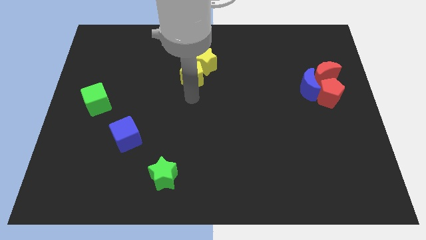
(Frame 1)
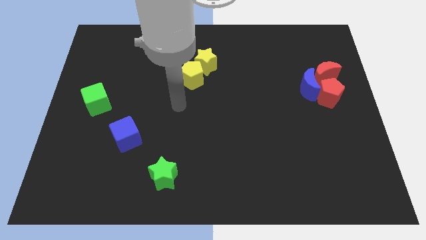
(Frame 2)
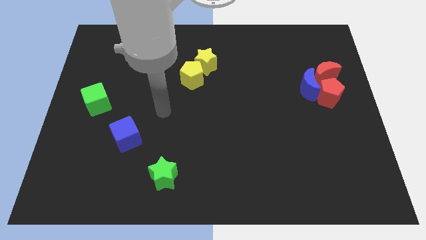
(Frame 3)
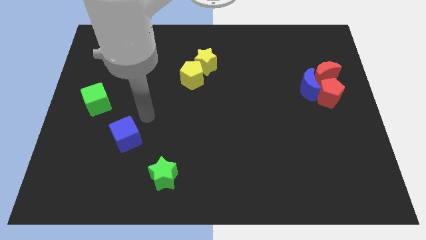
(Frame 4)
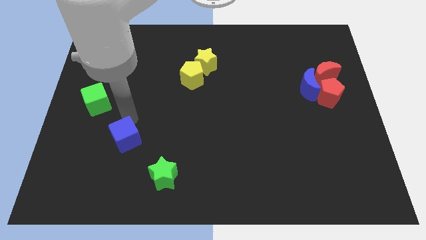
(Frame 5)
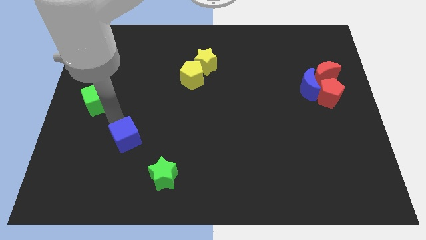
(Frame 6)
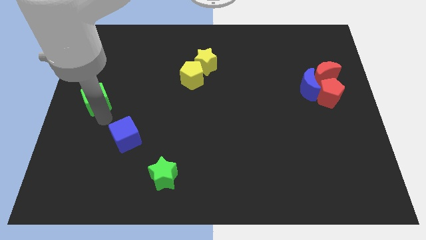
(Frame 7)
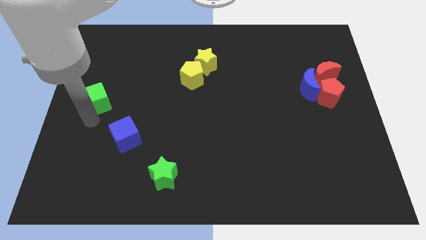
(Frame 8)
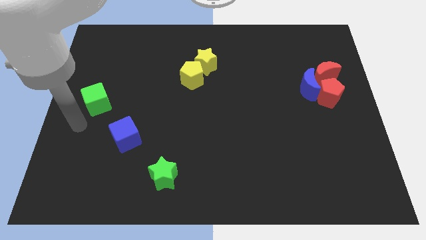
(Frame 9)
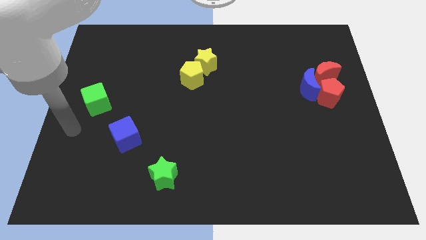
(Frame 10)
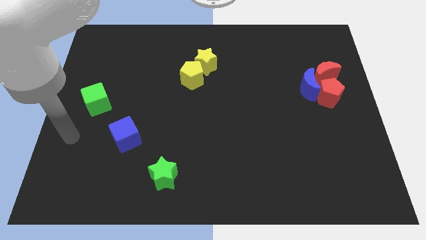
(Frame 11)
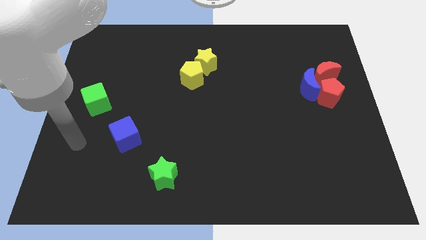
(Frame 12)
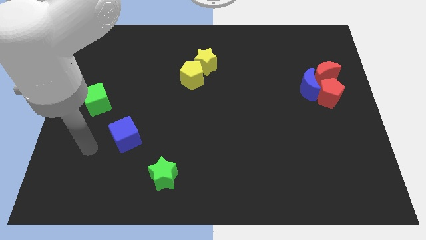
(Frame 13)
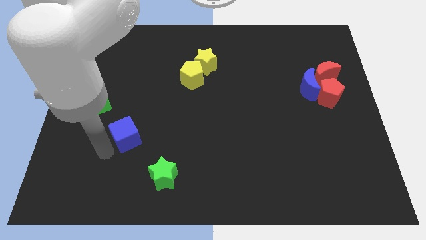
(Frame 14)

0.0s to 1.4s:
move your arm to the left of blue cube

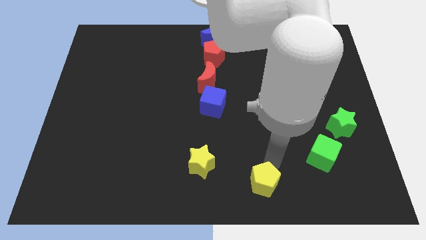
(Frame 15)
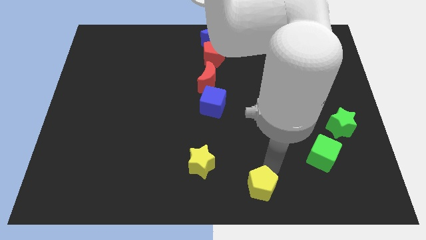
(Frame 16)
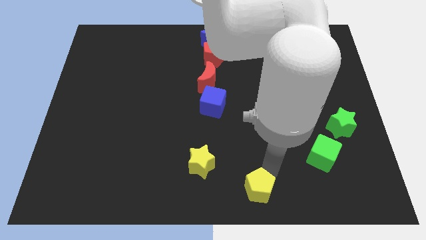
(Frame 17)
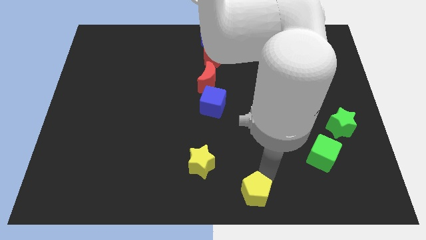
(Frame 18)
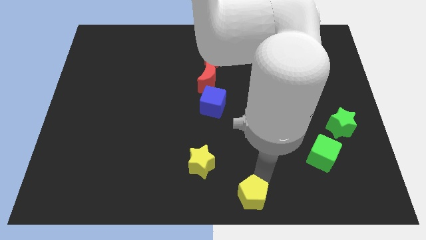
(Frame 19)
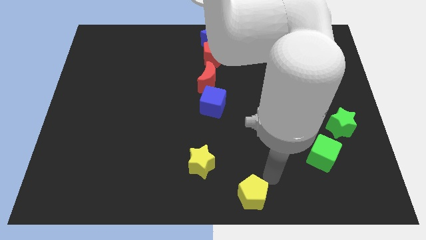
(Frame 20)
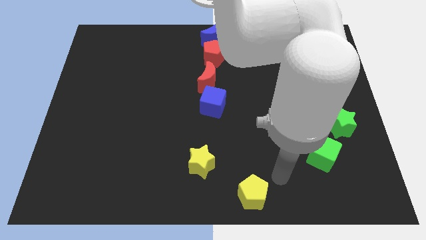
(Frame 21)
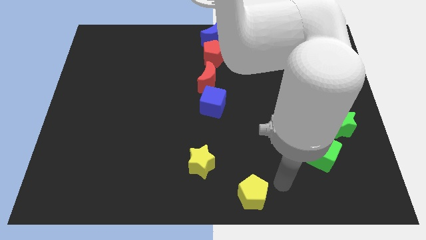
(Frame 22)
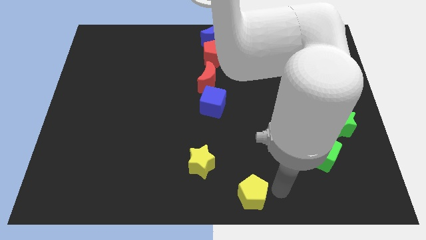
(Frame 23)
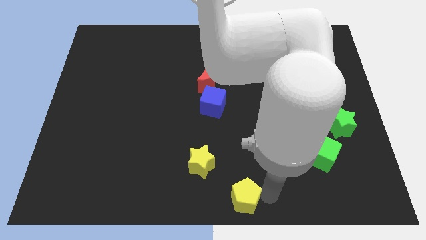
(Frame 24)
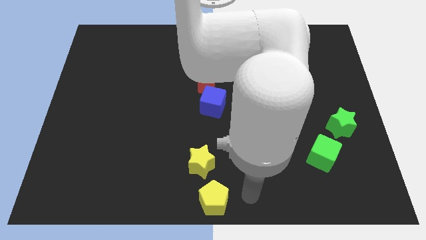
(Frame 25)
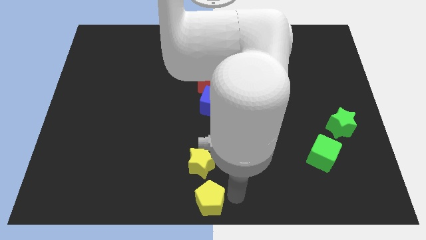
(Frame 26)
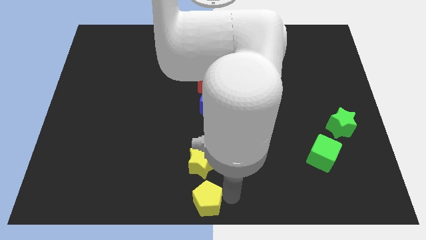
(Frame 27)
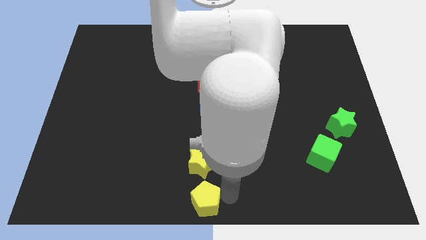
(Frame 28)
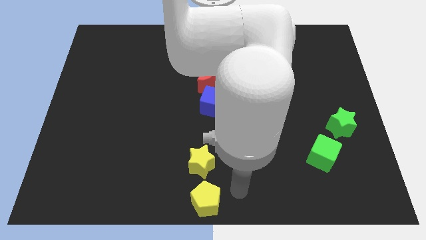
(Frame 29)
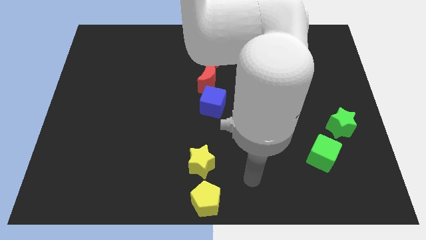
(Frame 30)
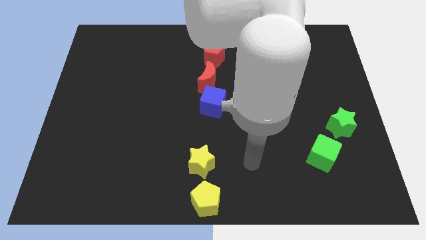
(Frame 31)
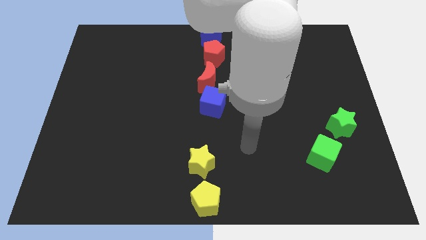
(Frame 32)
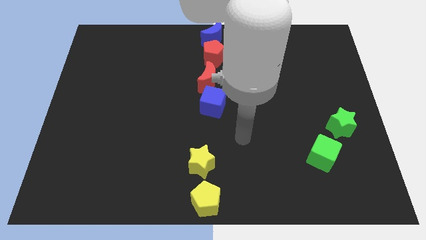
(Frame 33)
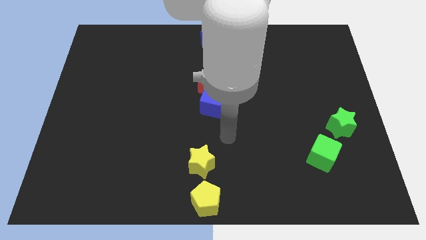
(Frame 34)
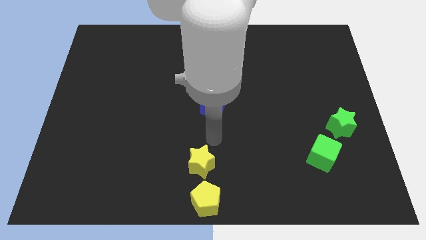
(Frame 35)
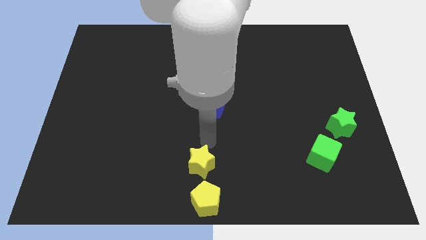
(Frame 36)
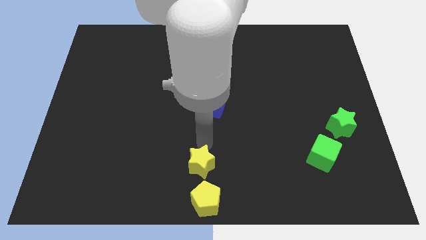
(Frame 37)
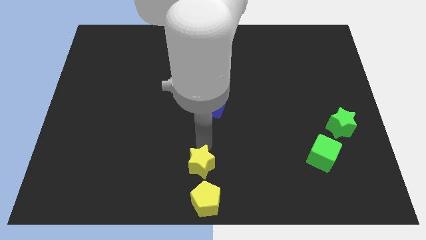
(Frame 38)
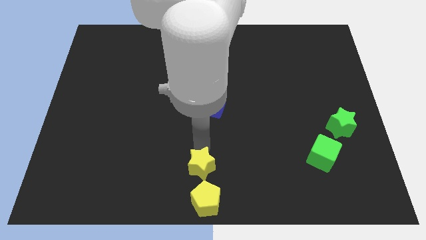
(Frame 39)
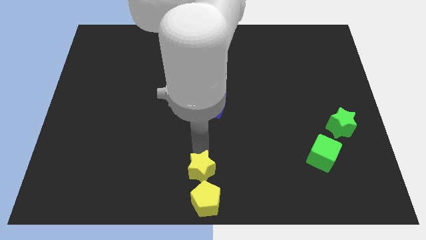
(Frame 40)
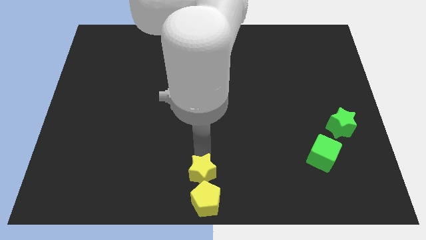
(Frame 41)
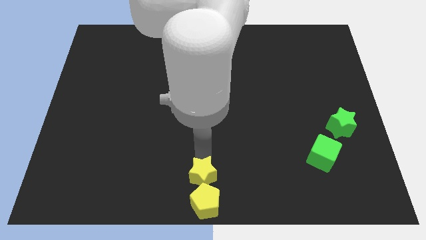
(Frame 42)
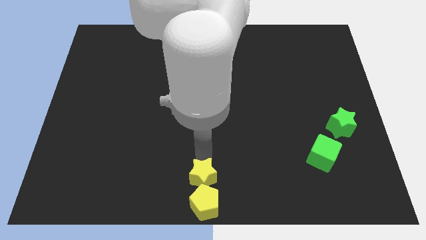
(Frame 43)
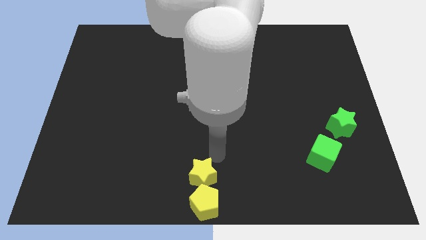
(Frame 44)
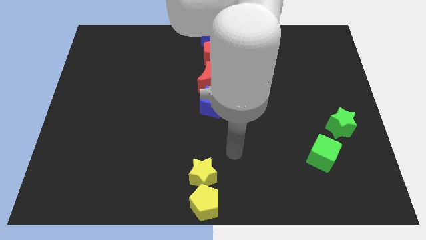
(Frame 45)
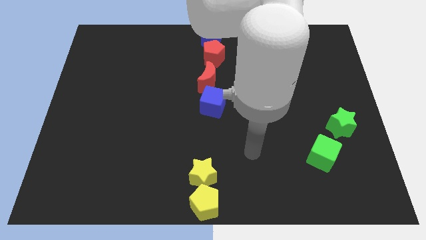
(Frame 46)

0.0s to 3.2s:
push yellow star towards down

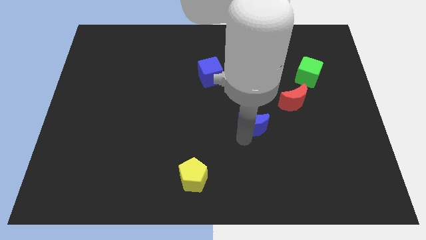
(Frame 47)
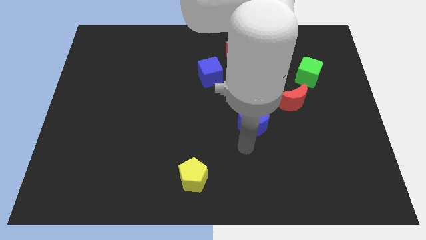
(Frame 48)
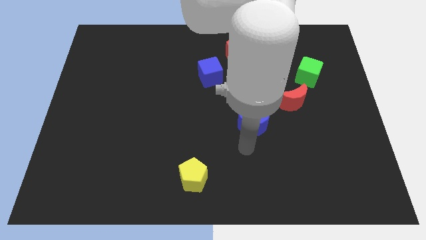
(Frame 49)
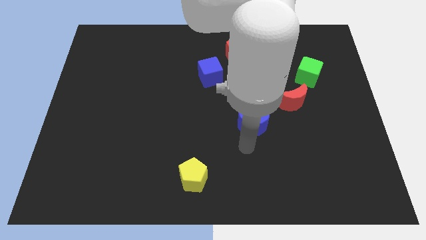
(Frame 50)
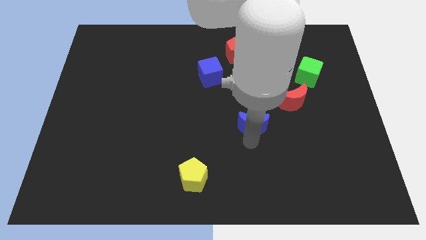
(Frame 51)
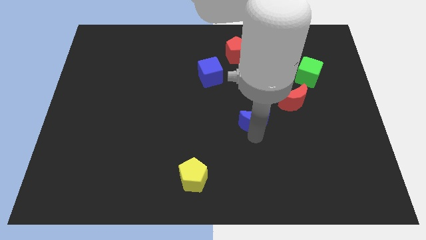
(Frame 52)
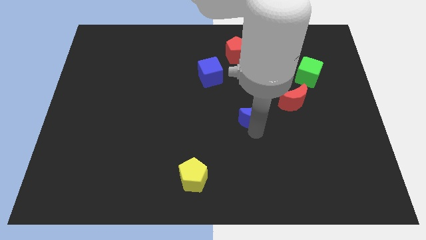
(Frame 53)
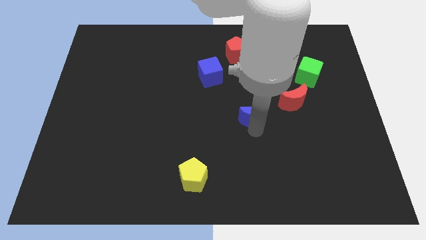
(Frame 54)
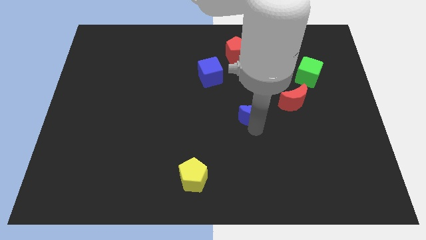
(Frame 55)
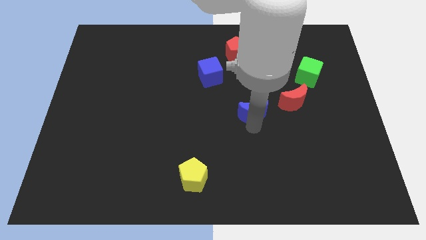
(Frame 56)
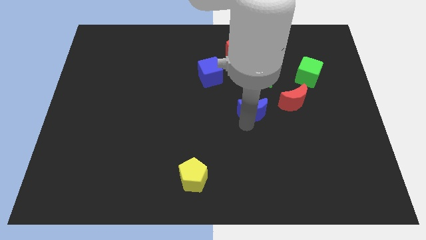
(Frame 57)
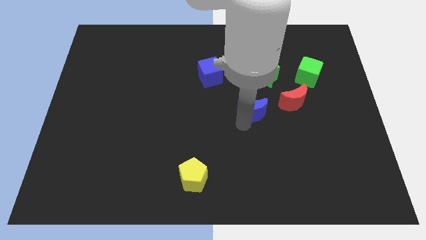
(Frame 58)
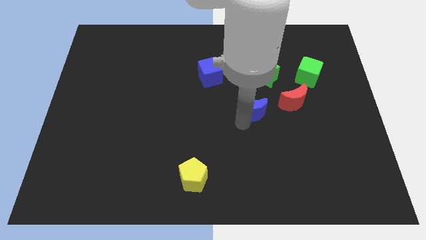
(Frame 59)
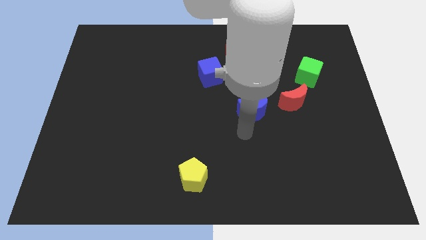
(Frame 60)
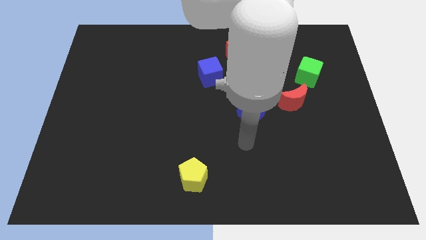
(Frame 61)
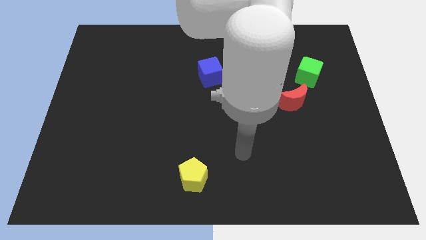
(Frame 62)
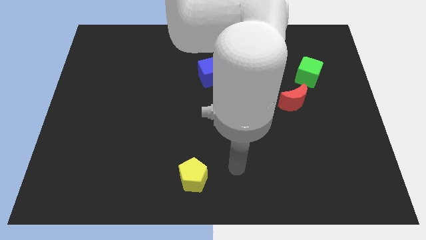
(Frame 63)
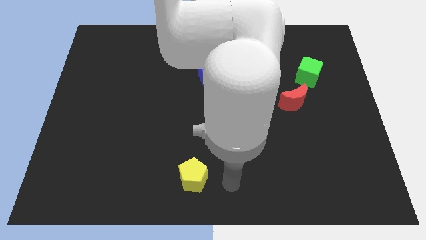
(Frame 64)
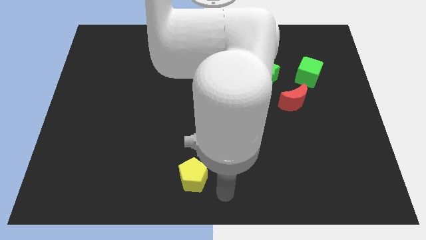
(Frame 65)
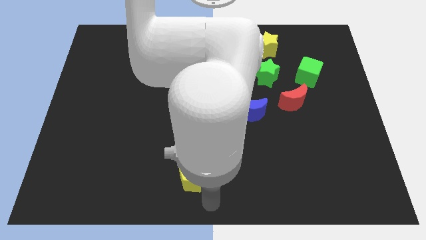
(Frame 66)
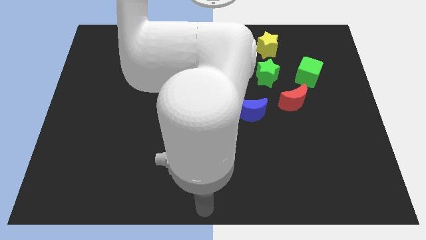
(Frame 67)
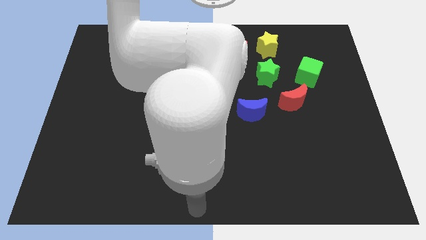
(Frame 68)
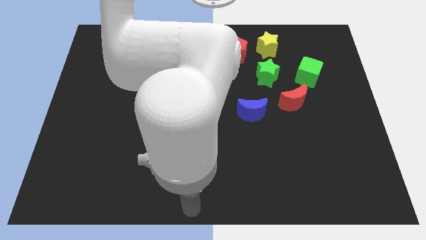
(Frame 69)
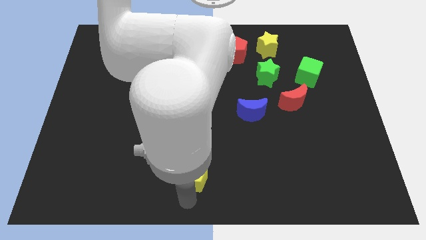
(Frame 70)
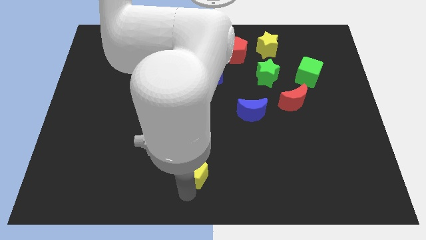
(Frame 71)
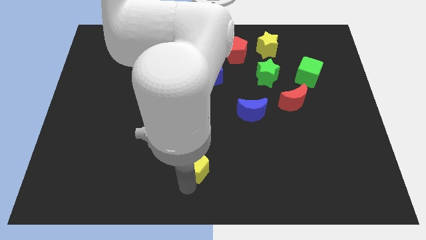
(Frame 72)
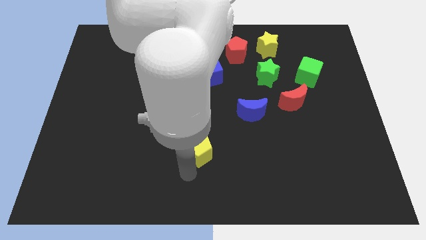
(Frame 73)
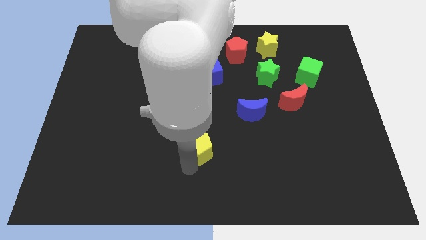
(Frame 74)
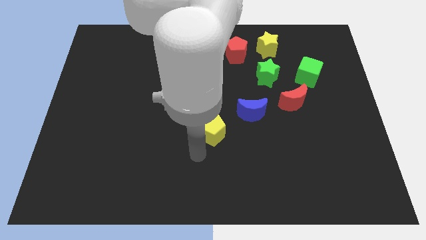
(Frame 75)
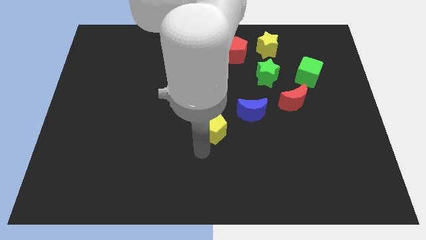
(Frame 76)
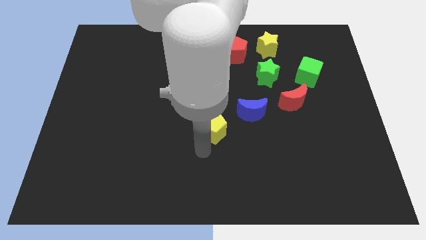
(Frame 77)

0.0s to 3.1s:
place the yellow pentagon vertically below blue cube

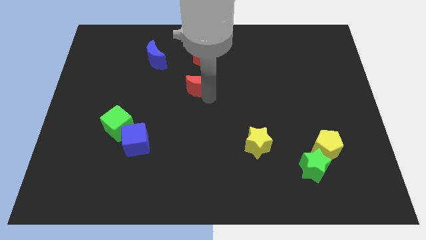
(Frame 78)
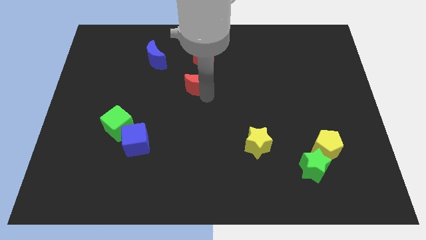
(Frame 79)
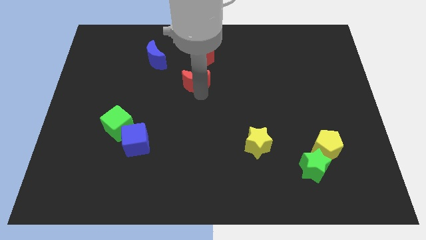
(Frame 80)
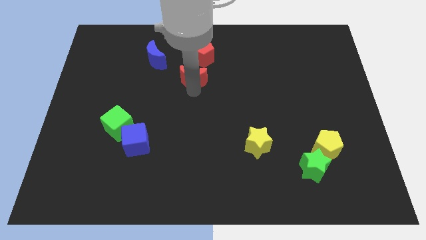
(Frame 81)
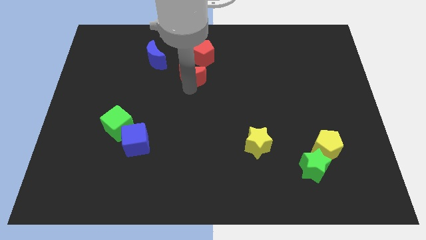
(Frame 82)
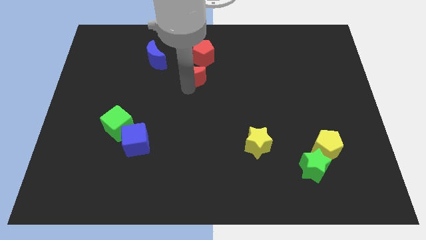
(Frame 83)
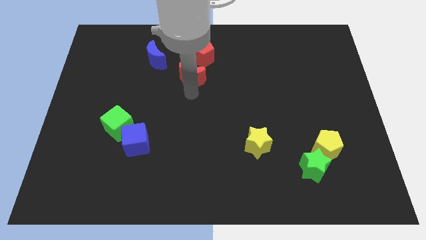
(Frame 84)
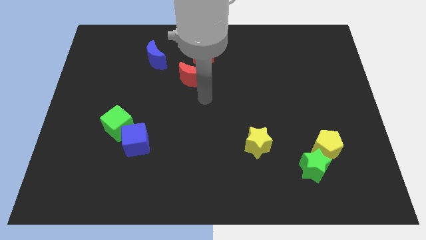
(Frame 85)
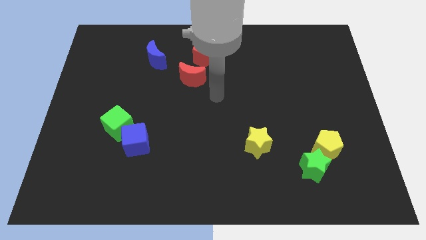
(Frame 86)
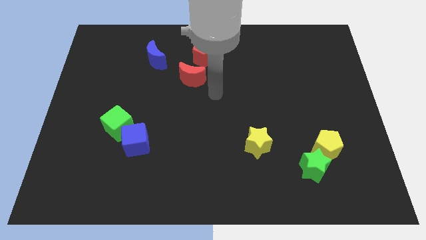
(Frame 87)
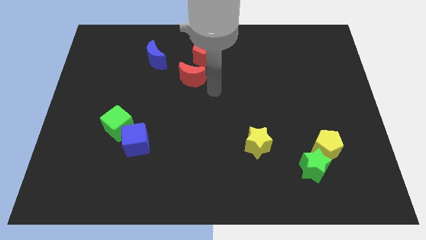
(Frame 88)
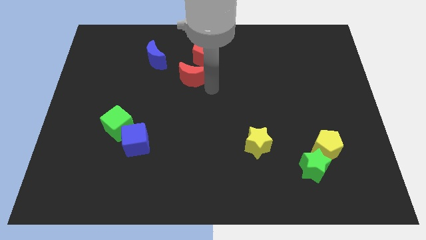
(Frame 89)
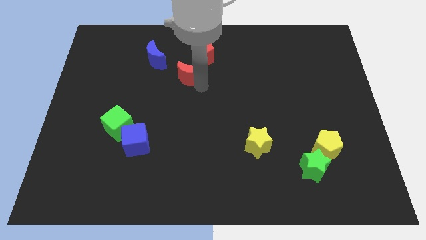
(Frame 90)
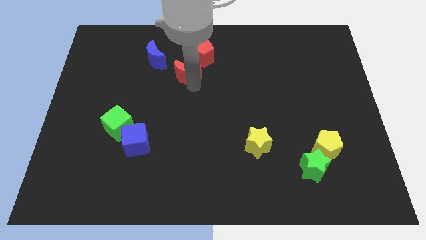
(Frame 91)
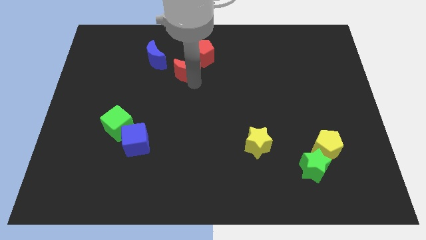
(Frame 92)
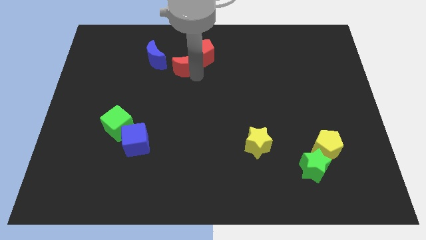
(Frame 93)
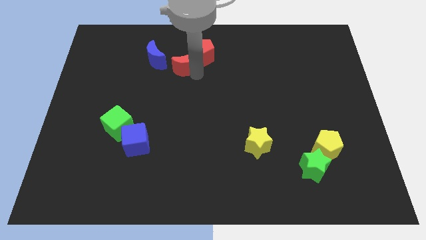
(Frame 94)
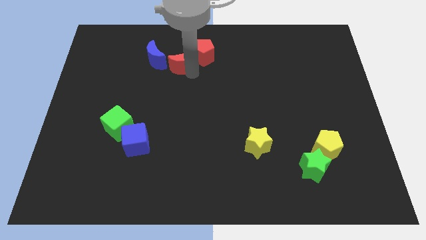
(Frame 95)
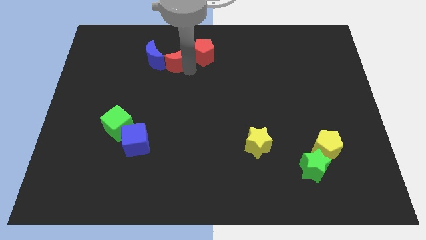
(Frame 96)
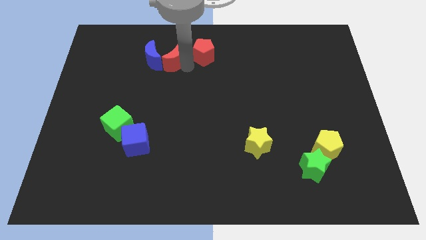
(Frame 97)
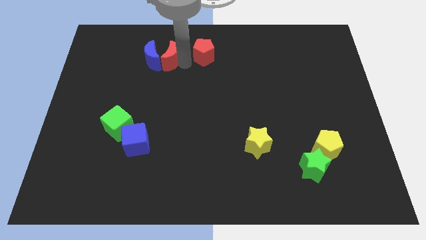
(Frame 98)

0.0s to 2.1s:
push red crescent in between blue moon and red pentagon
